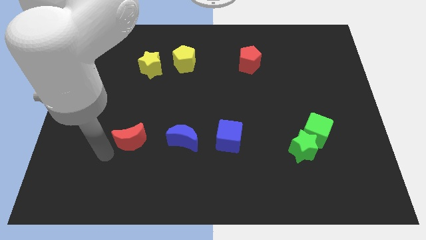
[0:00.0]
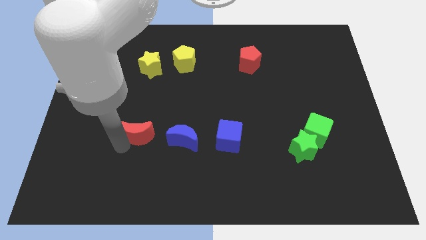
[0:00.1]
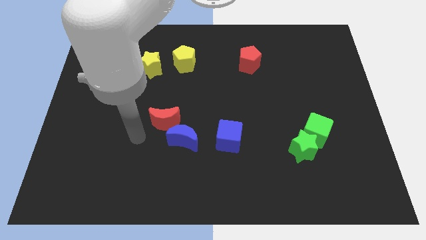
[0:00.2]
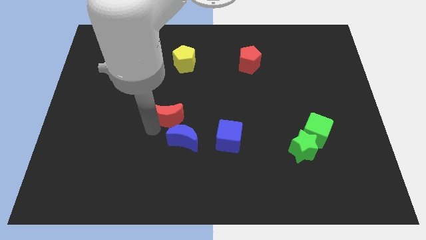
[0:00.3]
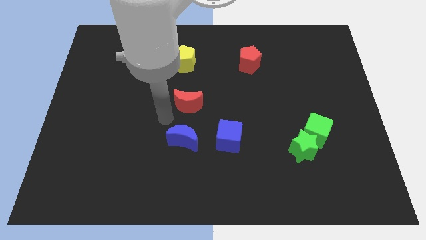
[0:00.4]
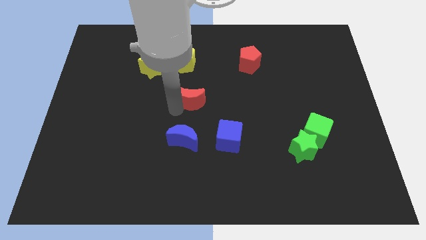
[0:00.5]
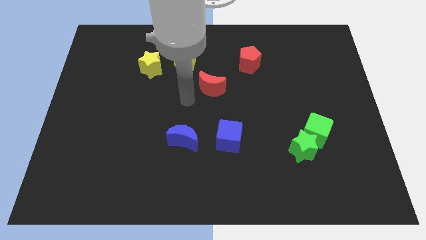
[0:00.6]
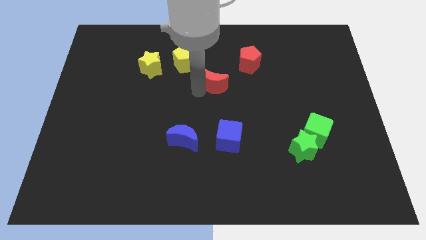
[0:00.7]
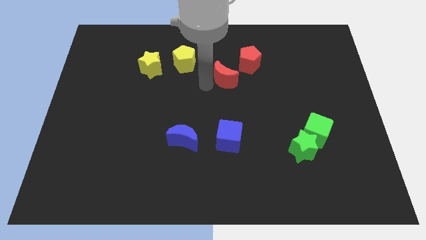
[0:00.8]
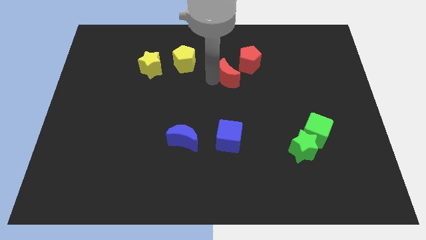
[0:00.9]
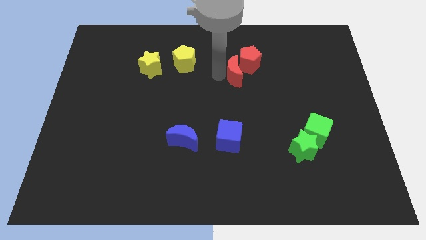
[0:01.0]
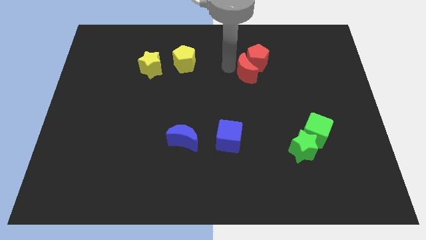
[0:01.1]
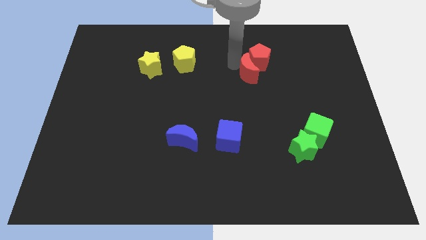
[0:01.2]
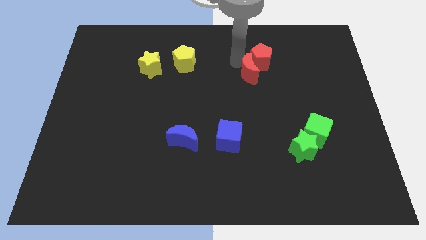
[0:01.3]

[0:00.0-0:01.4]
move red moon into the red pentagon

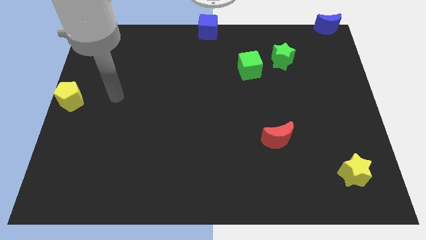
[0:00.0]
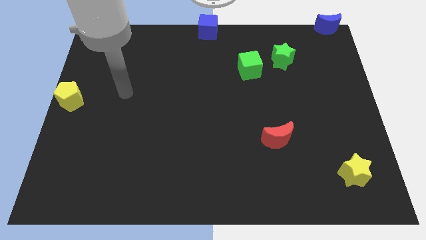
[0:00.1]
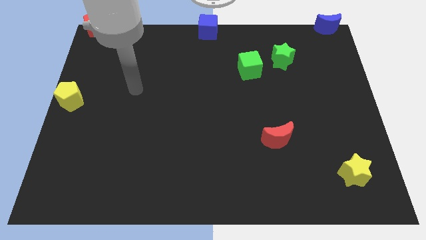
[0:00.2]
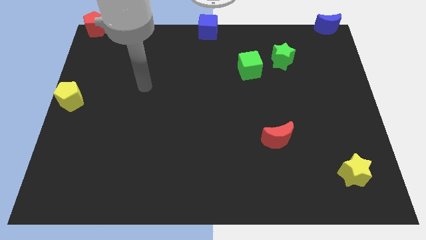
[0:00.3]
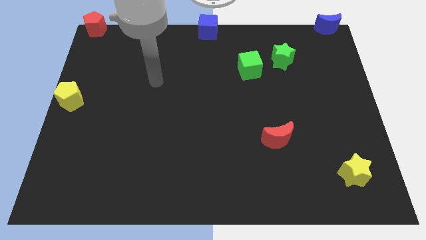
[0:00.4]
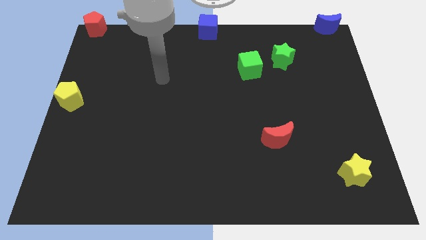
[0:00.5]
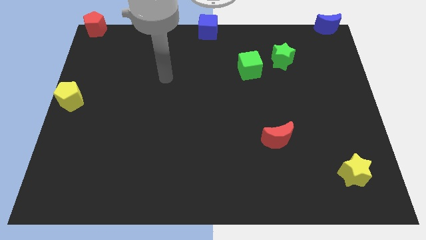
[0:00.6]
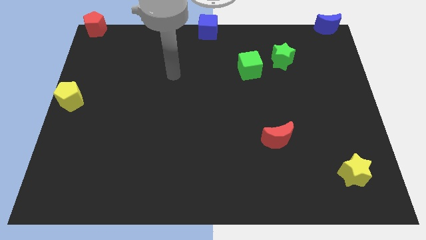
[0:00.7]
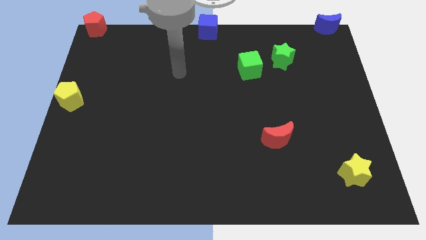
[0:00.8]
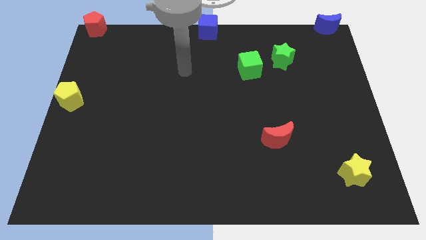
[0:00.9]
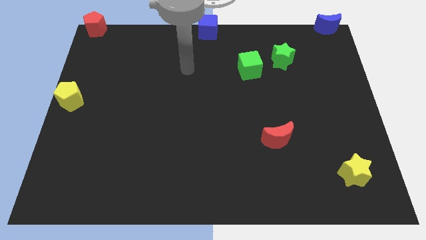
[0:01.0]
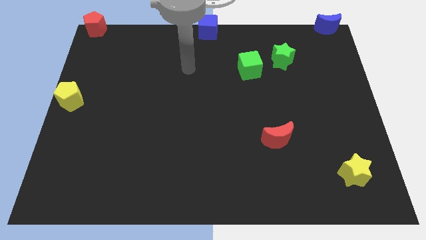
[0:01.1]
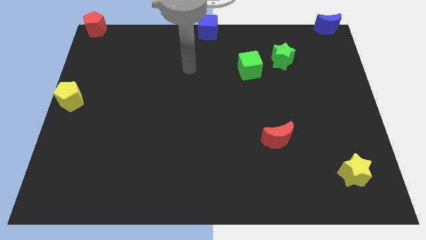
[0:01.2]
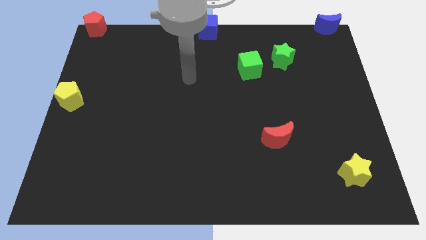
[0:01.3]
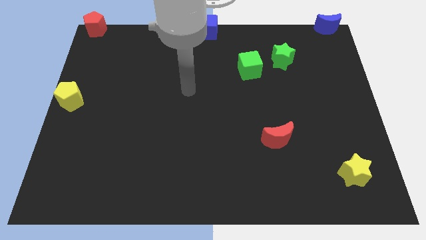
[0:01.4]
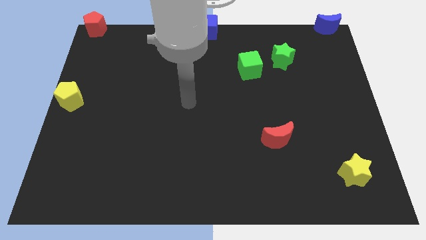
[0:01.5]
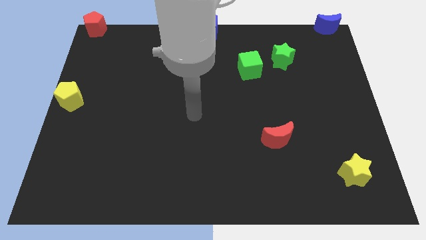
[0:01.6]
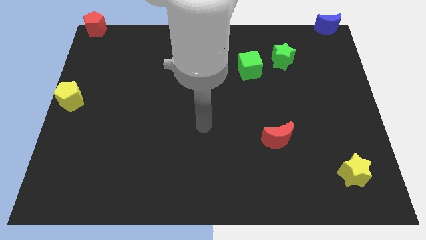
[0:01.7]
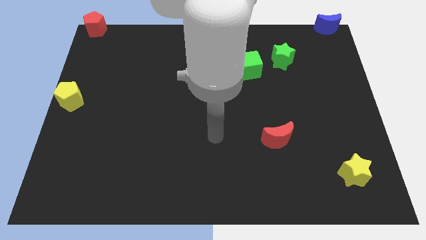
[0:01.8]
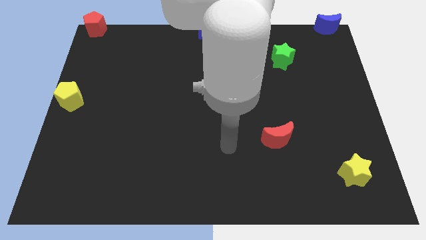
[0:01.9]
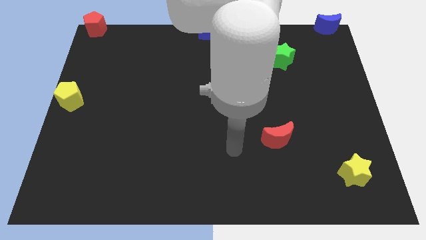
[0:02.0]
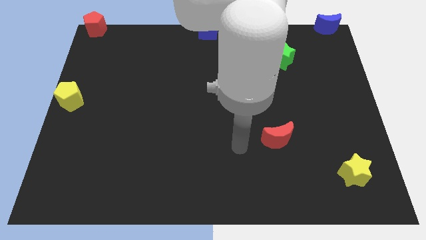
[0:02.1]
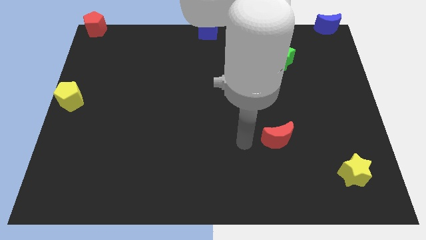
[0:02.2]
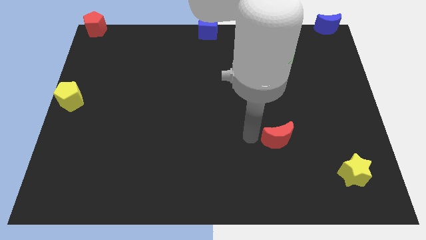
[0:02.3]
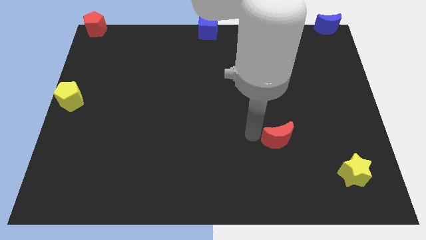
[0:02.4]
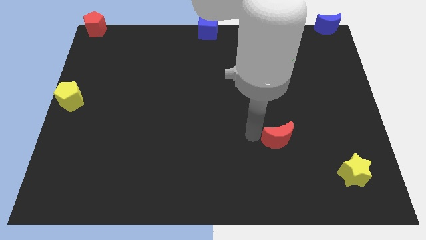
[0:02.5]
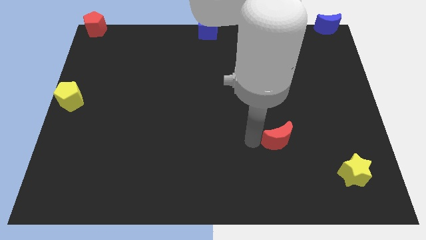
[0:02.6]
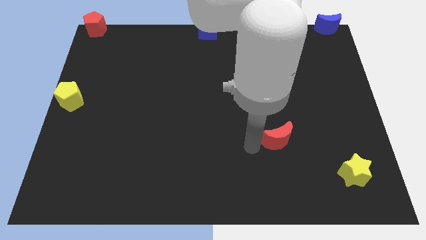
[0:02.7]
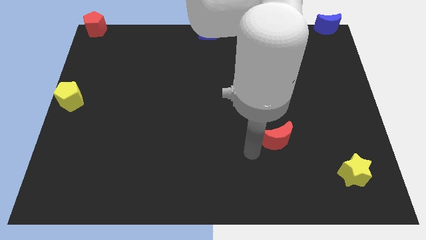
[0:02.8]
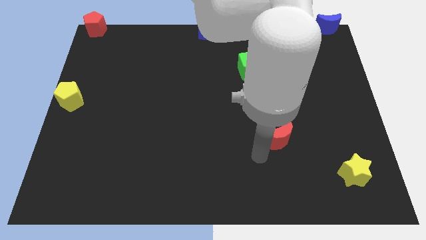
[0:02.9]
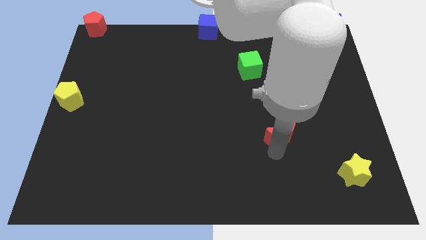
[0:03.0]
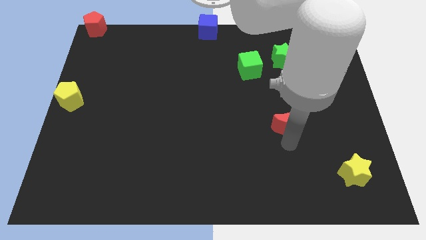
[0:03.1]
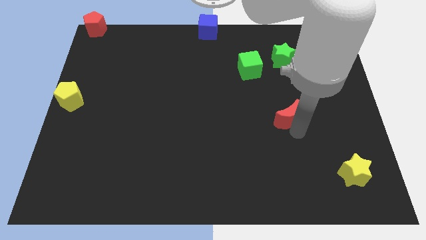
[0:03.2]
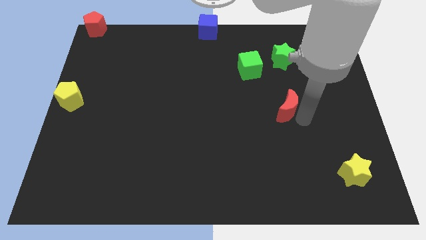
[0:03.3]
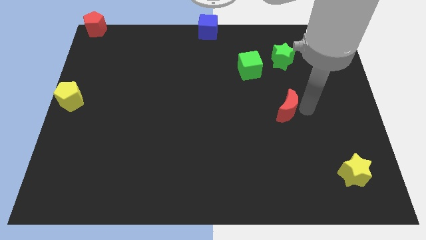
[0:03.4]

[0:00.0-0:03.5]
move the red crescent at the bottom side of the green star

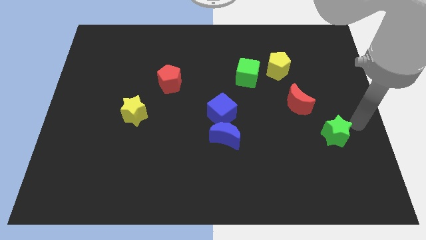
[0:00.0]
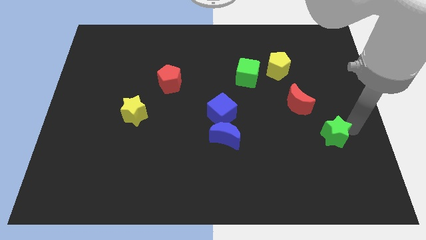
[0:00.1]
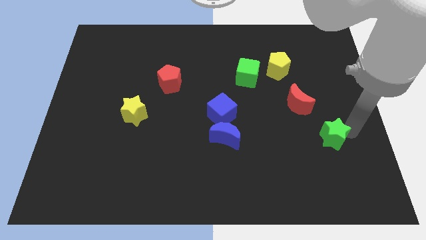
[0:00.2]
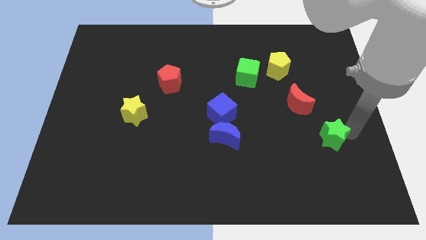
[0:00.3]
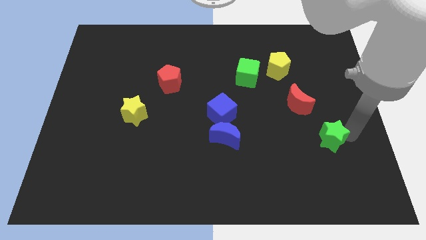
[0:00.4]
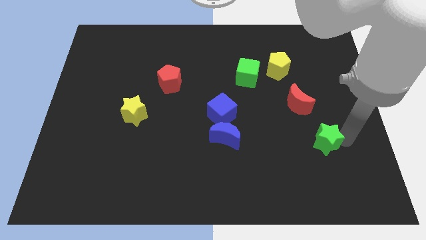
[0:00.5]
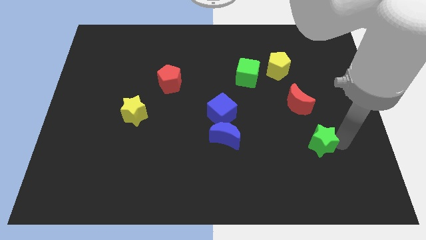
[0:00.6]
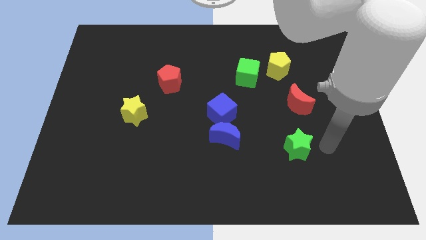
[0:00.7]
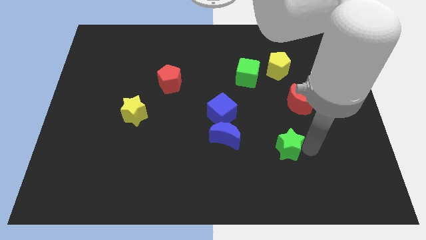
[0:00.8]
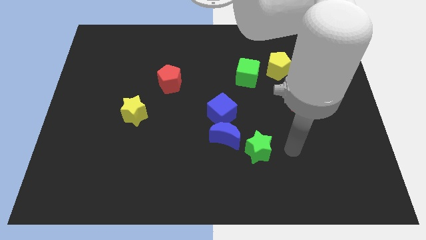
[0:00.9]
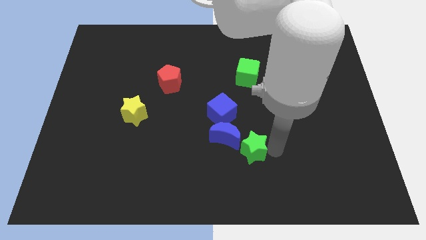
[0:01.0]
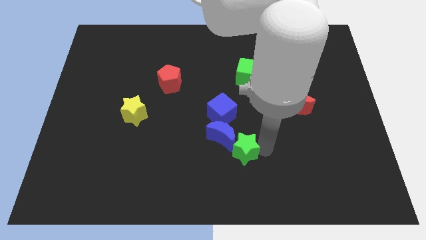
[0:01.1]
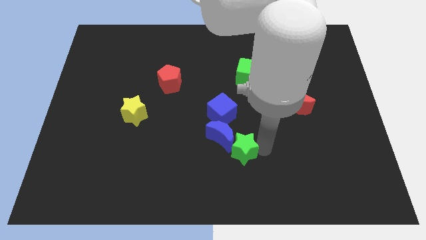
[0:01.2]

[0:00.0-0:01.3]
slide the green star diagonally bottom left to the red moon

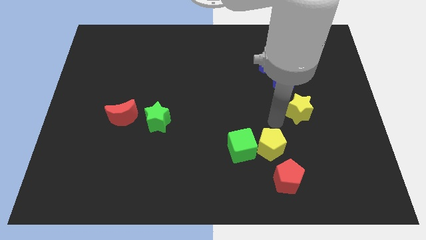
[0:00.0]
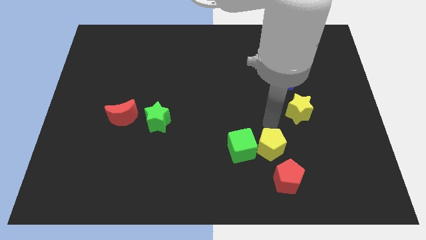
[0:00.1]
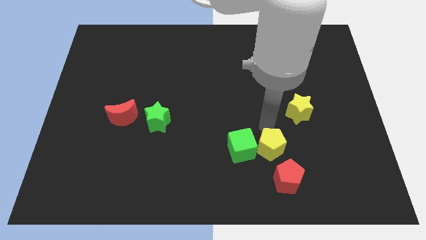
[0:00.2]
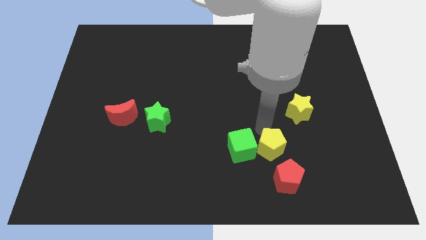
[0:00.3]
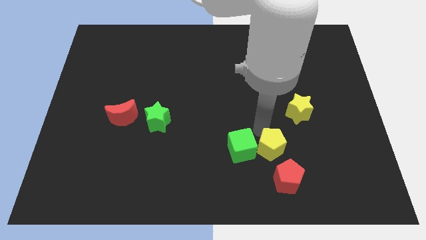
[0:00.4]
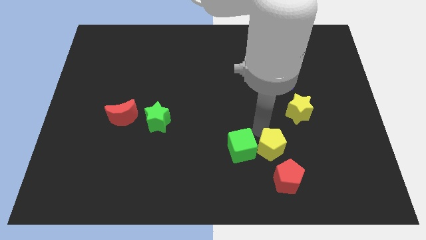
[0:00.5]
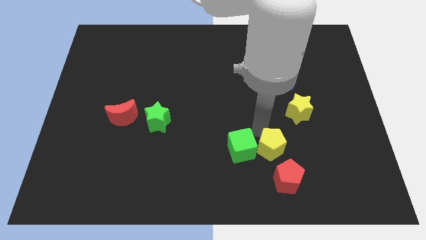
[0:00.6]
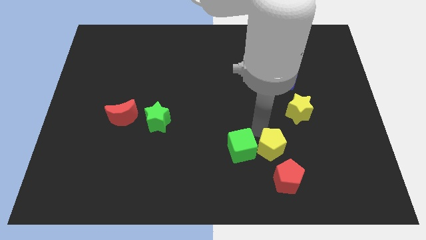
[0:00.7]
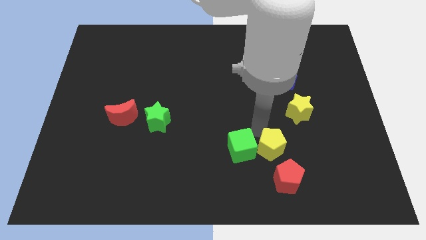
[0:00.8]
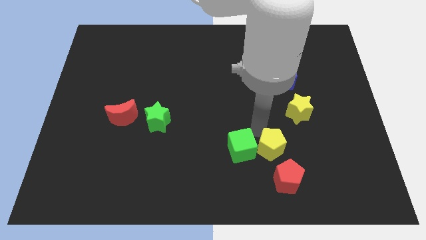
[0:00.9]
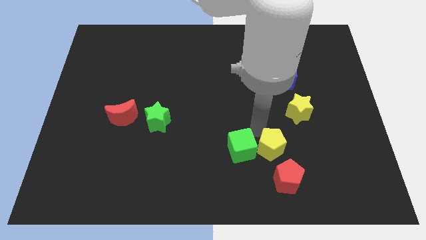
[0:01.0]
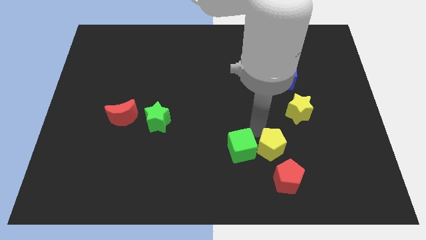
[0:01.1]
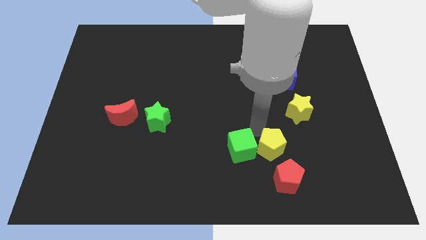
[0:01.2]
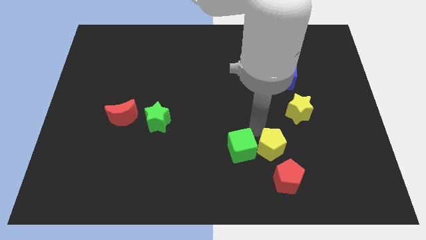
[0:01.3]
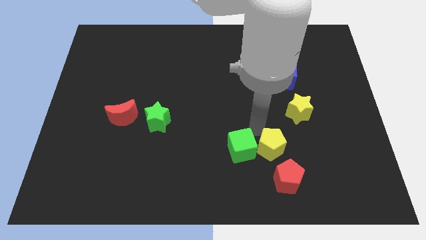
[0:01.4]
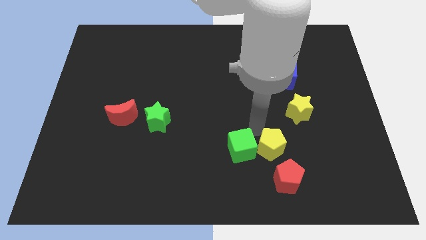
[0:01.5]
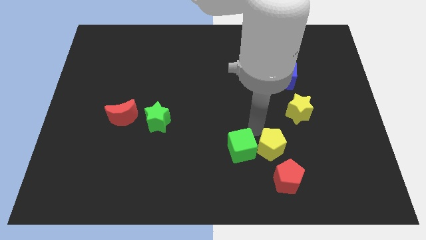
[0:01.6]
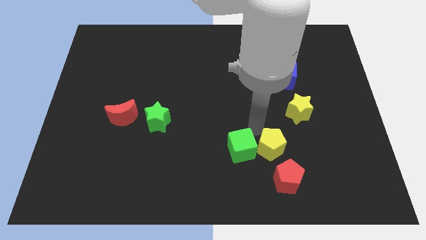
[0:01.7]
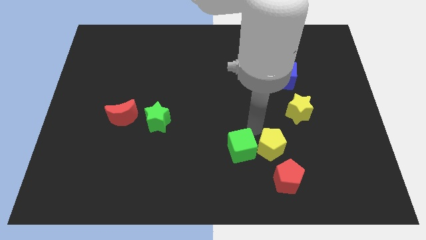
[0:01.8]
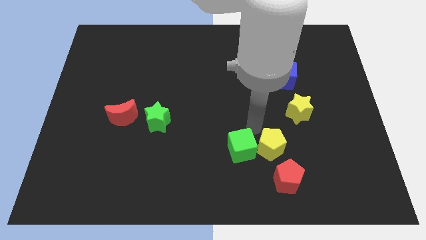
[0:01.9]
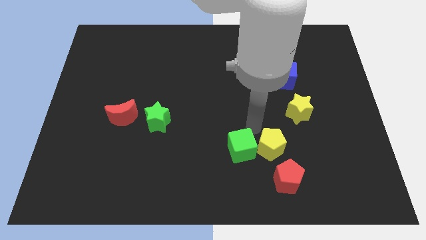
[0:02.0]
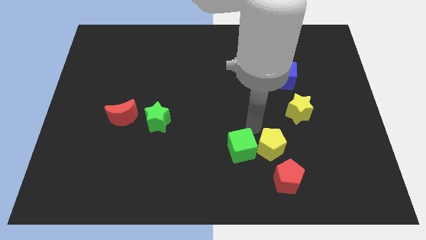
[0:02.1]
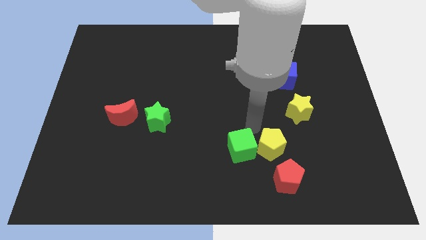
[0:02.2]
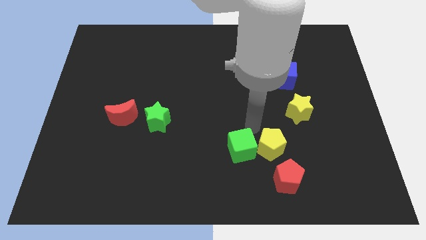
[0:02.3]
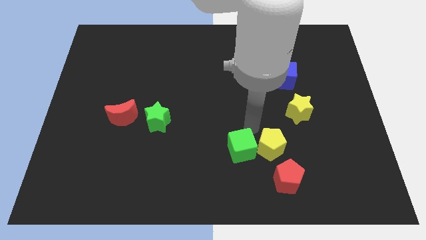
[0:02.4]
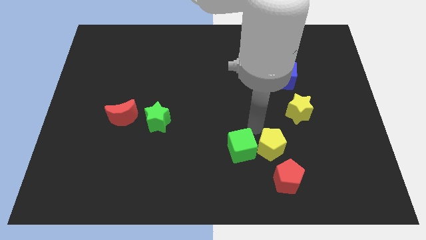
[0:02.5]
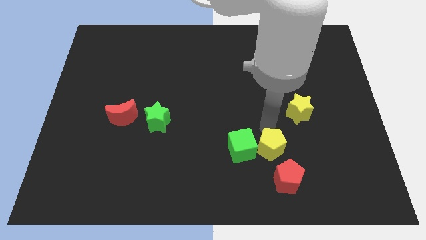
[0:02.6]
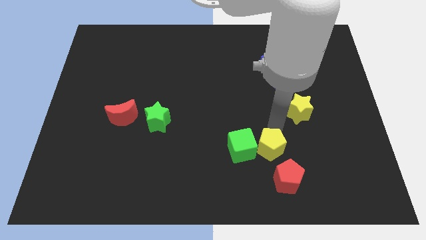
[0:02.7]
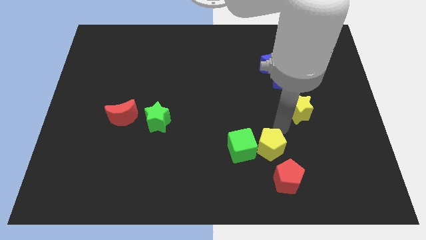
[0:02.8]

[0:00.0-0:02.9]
put your hand between the yellow pentagon and yellow star
